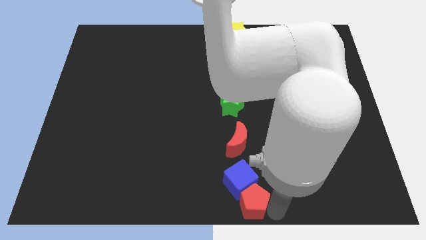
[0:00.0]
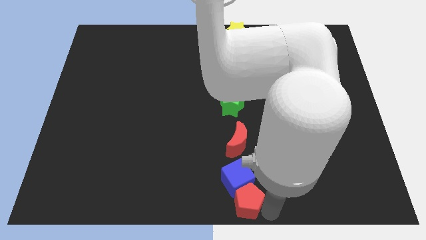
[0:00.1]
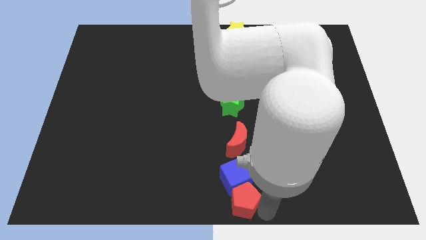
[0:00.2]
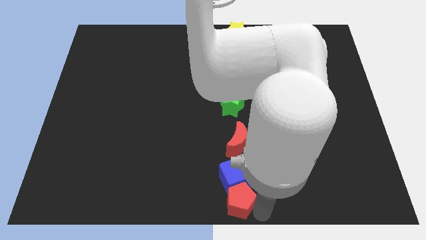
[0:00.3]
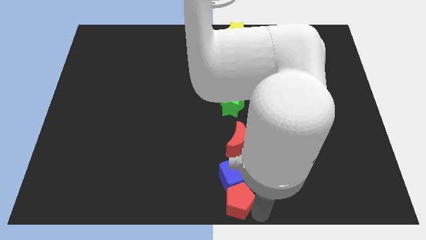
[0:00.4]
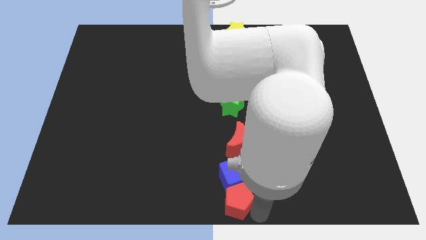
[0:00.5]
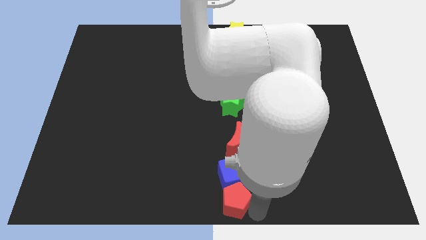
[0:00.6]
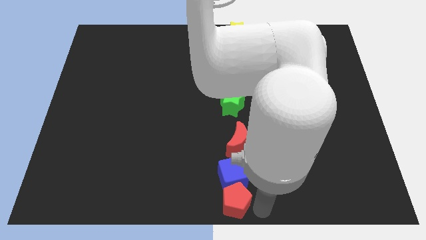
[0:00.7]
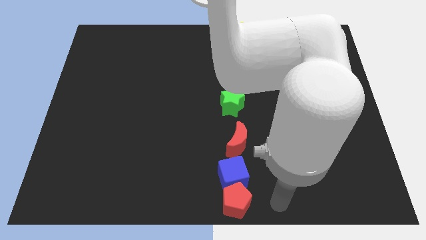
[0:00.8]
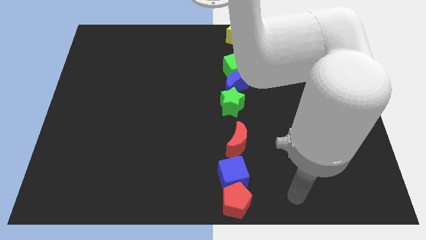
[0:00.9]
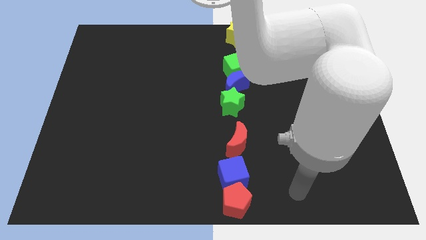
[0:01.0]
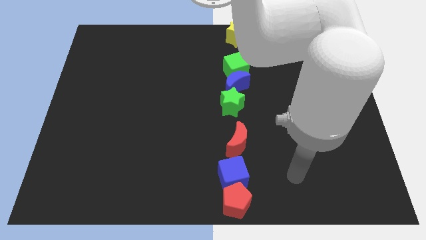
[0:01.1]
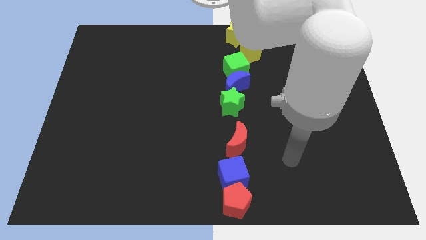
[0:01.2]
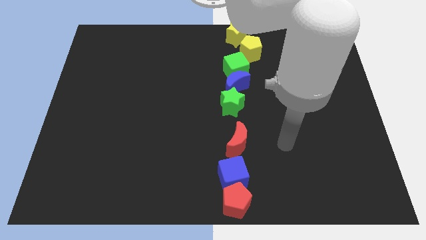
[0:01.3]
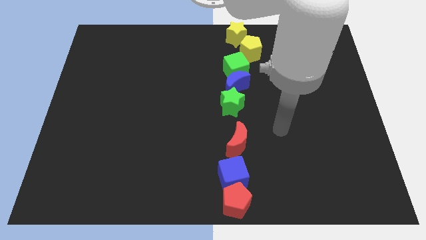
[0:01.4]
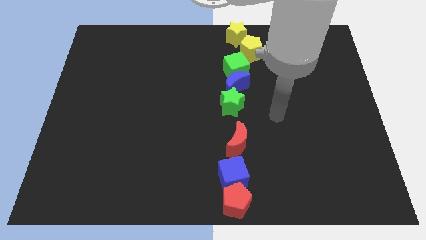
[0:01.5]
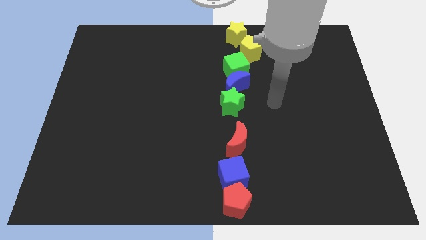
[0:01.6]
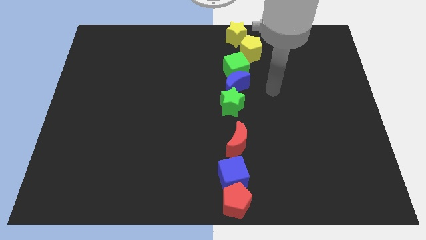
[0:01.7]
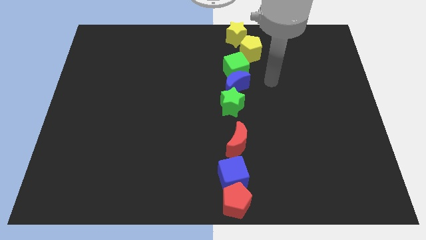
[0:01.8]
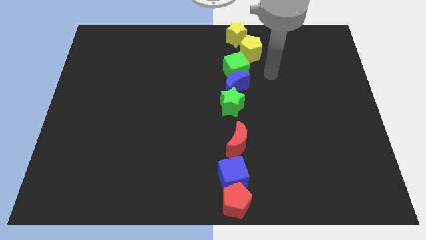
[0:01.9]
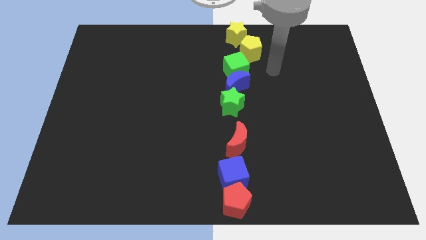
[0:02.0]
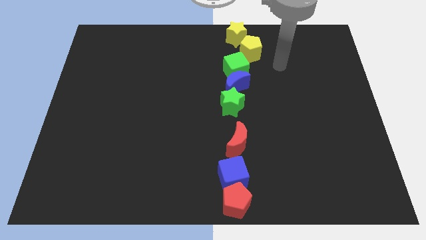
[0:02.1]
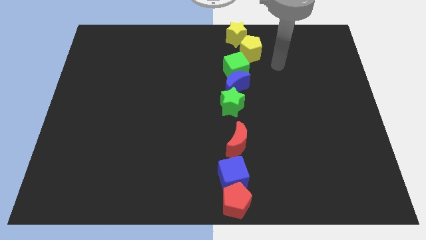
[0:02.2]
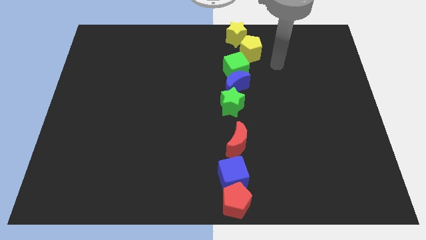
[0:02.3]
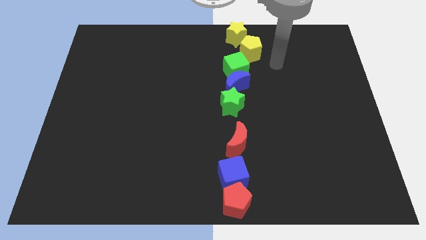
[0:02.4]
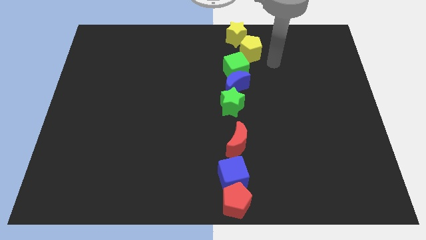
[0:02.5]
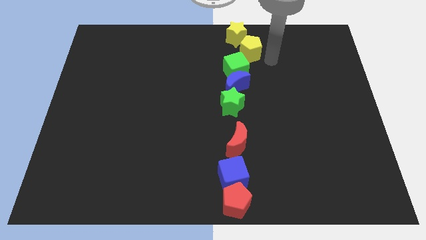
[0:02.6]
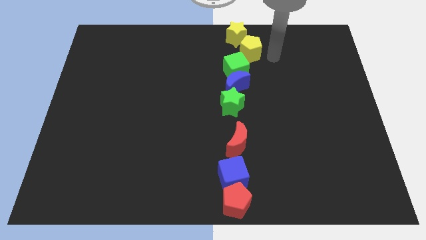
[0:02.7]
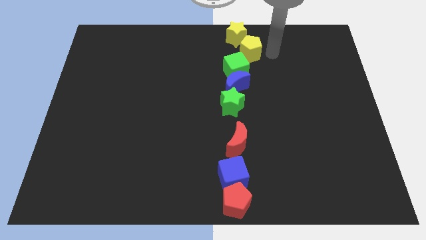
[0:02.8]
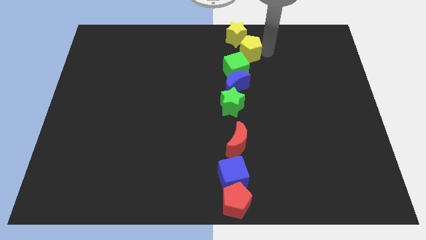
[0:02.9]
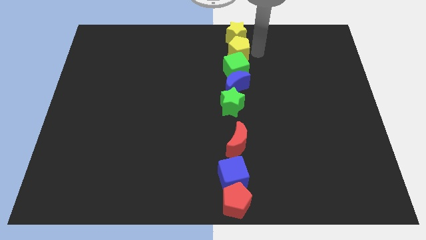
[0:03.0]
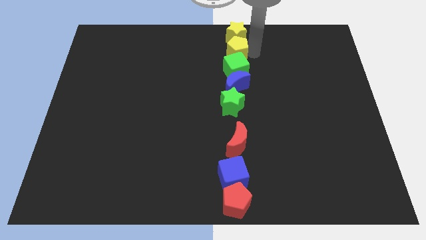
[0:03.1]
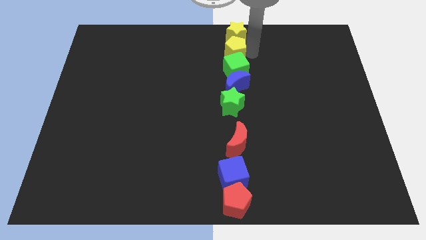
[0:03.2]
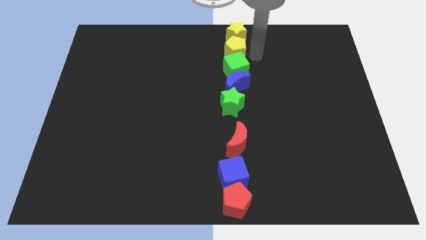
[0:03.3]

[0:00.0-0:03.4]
move arm to the yellow pentagon

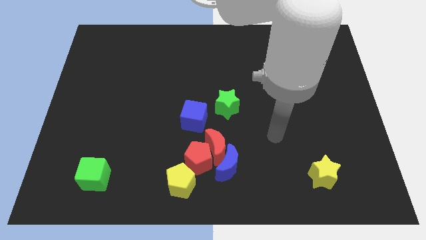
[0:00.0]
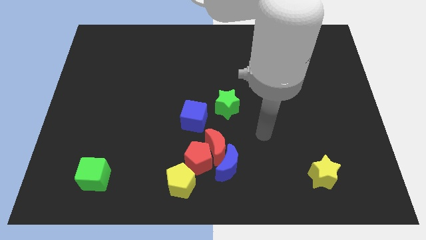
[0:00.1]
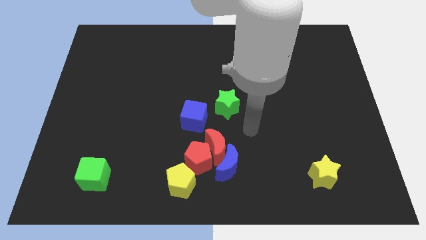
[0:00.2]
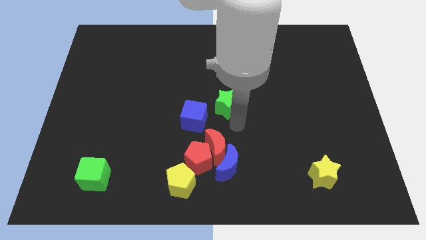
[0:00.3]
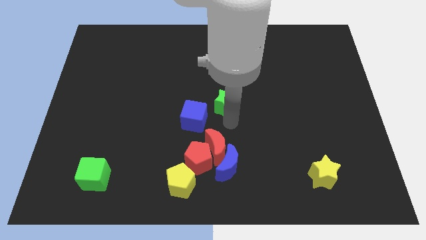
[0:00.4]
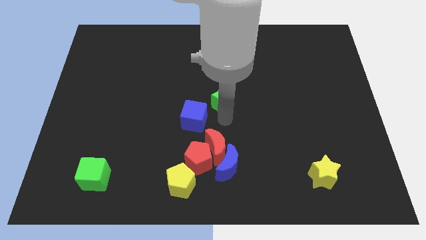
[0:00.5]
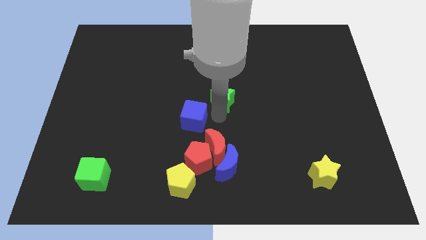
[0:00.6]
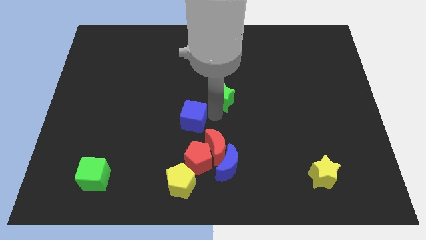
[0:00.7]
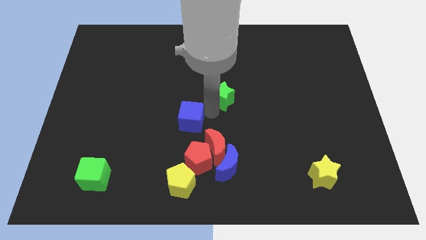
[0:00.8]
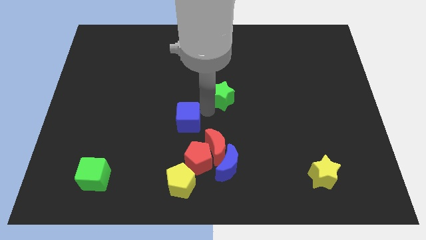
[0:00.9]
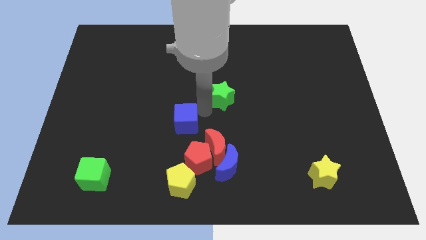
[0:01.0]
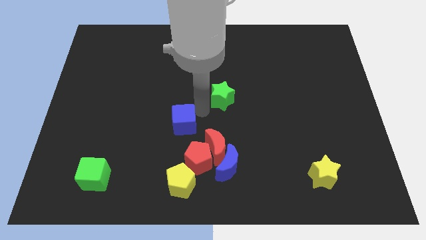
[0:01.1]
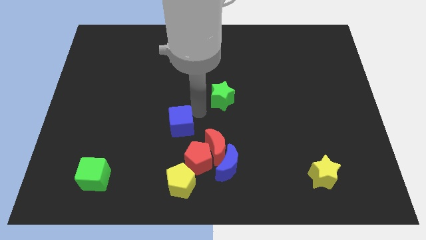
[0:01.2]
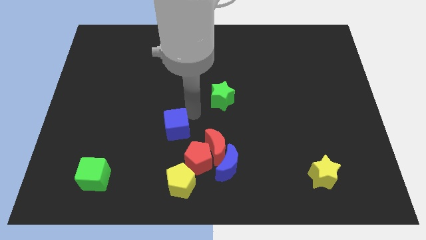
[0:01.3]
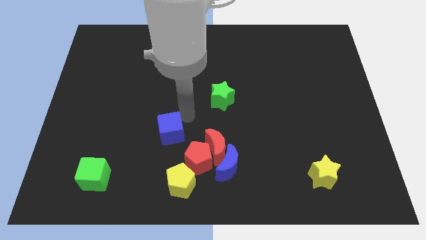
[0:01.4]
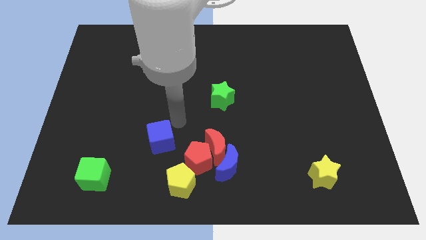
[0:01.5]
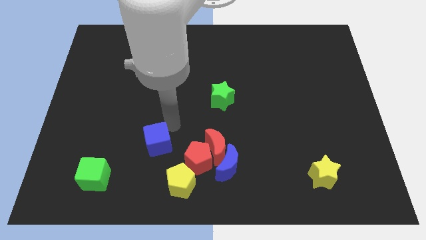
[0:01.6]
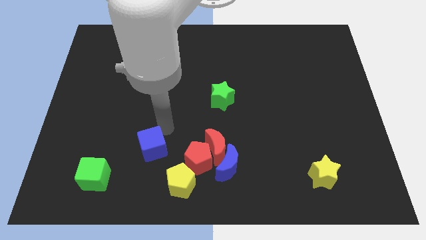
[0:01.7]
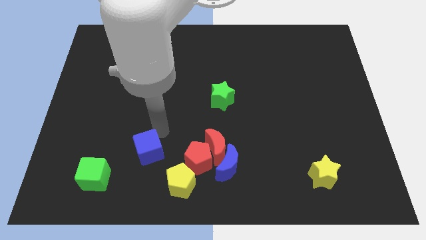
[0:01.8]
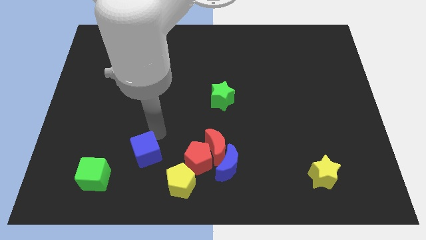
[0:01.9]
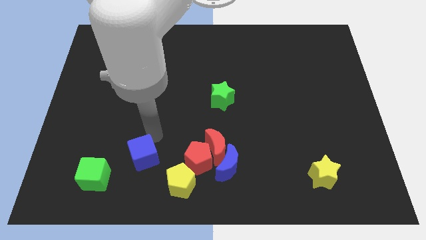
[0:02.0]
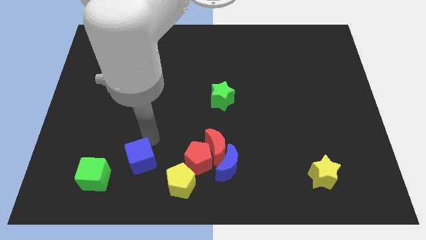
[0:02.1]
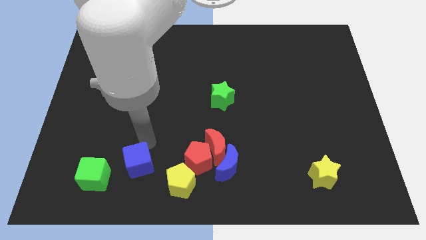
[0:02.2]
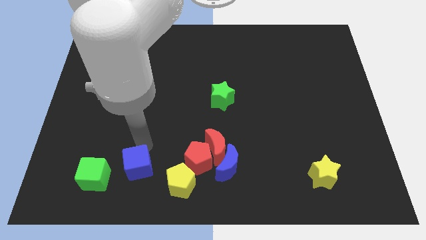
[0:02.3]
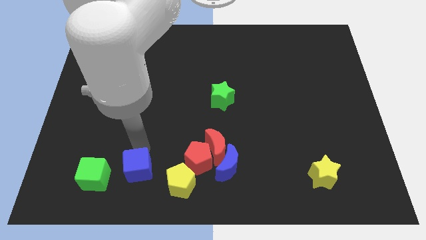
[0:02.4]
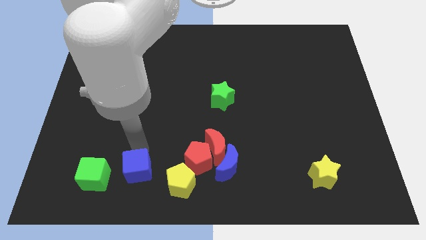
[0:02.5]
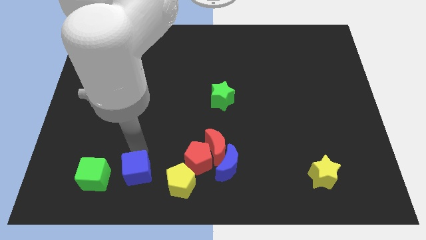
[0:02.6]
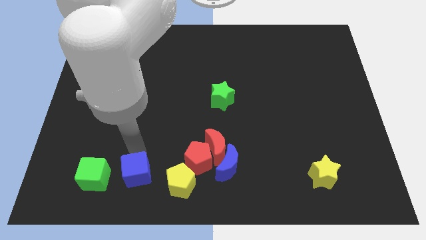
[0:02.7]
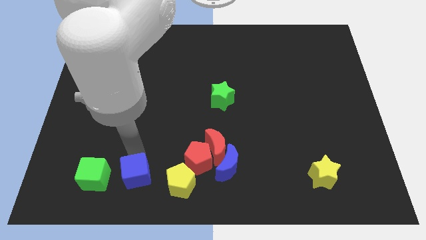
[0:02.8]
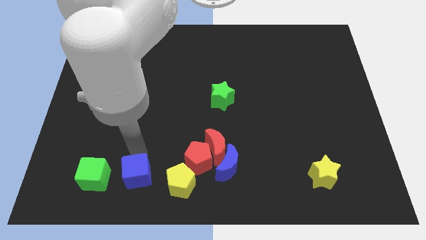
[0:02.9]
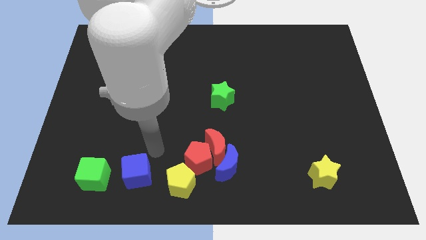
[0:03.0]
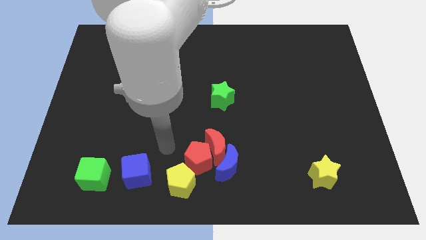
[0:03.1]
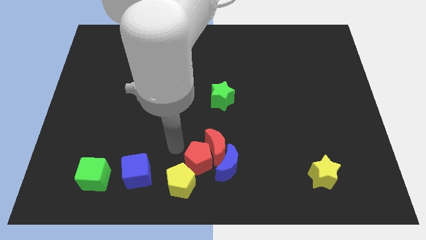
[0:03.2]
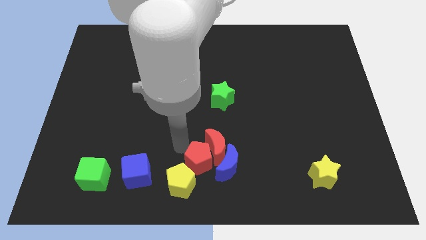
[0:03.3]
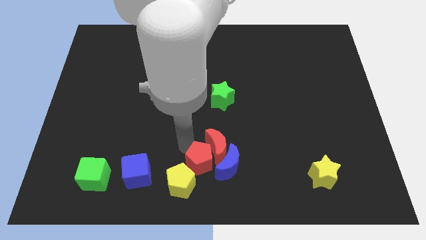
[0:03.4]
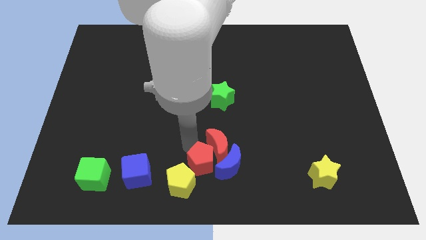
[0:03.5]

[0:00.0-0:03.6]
move the blue cube to the right of the green cube

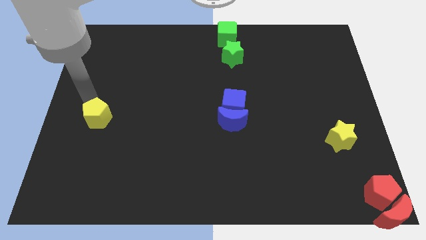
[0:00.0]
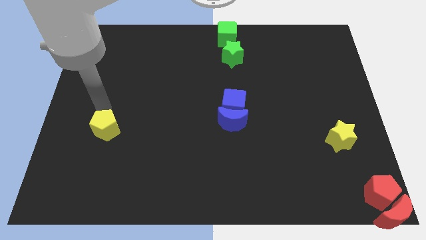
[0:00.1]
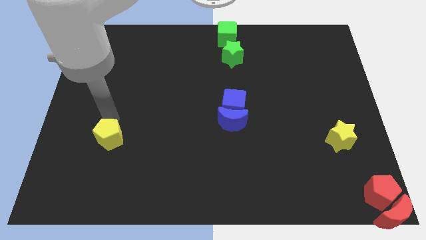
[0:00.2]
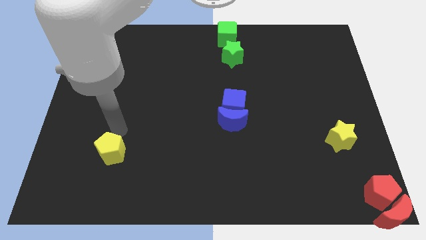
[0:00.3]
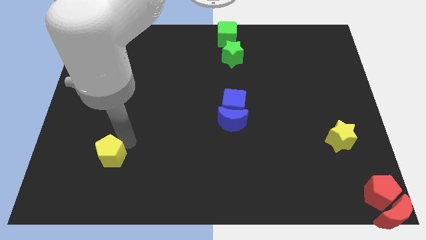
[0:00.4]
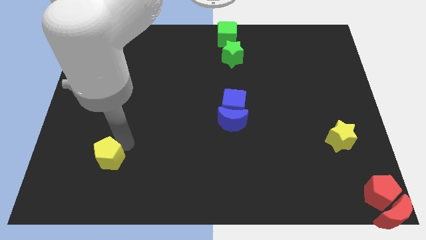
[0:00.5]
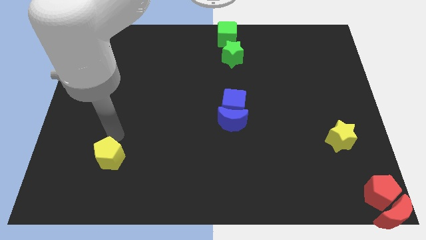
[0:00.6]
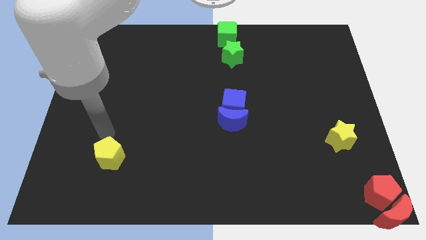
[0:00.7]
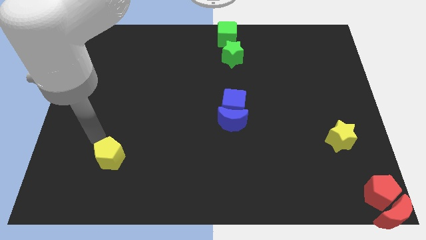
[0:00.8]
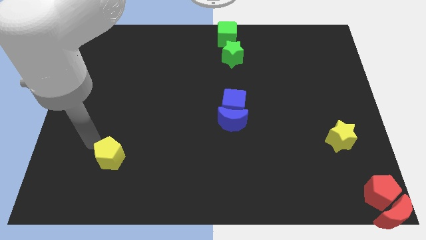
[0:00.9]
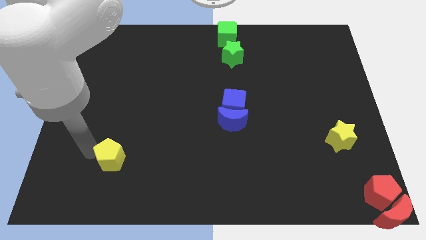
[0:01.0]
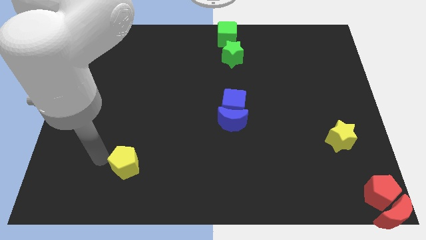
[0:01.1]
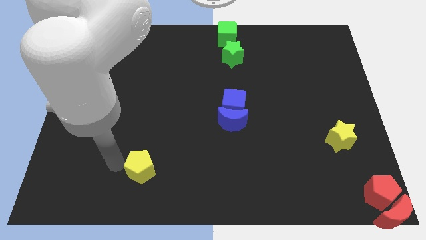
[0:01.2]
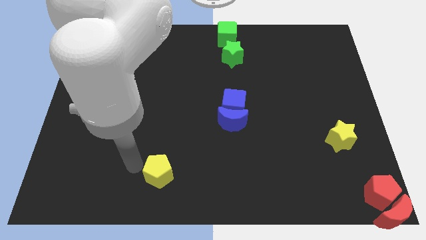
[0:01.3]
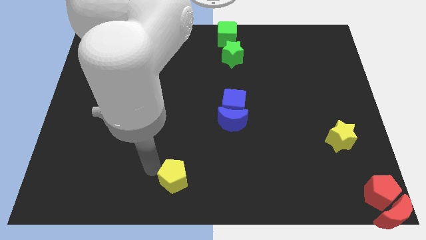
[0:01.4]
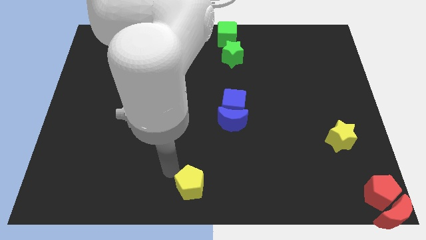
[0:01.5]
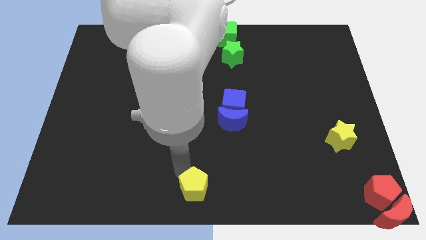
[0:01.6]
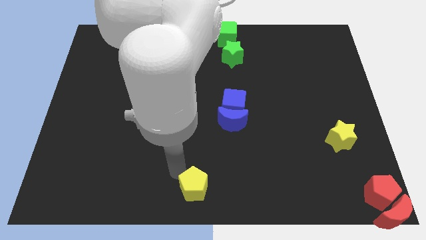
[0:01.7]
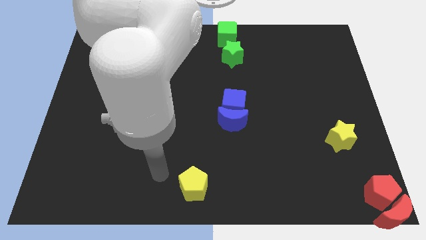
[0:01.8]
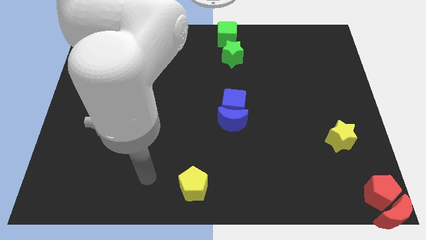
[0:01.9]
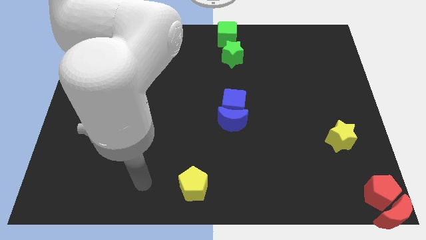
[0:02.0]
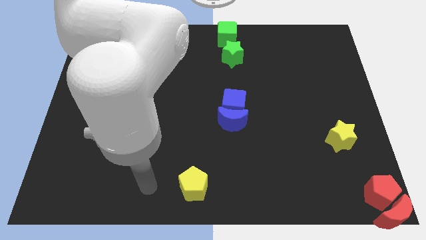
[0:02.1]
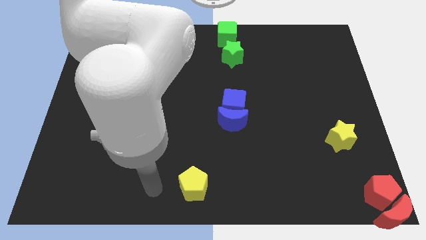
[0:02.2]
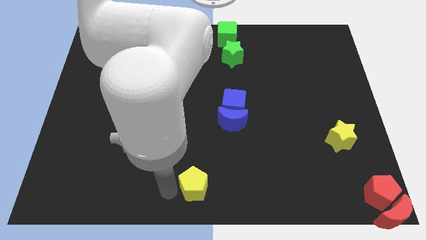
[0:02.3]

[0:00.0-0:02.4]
move the yellow pentagon towards the bottom center of the board
